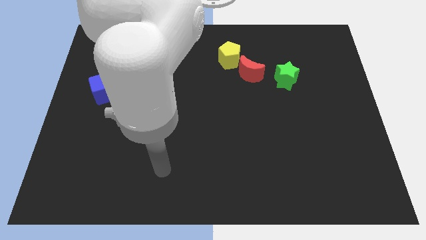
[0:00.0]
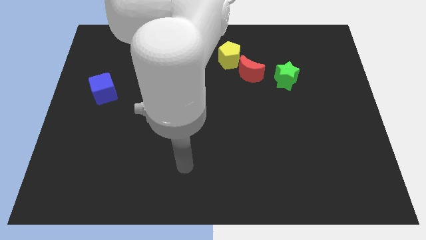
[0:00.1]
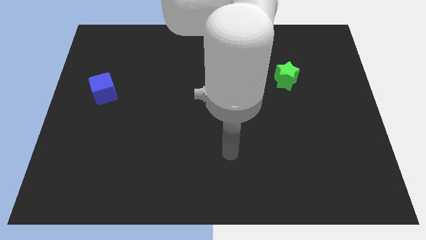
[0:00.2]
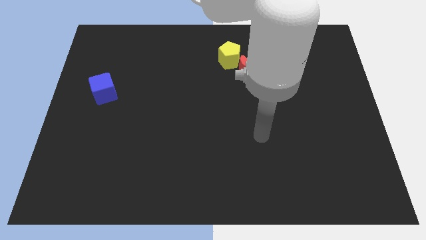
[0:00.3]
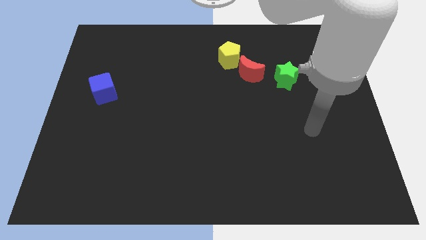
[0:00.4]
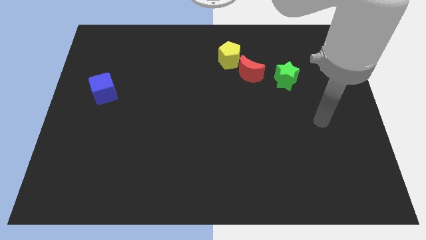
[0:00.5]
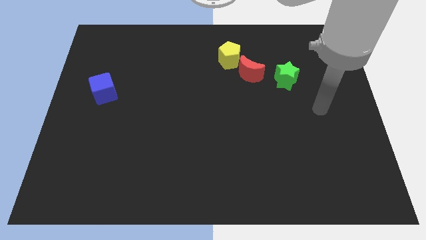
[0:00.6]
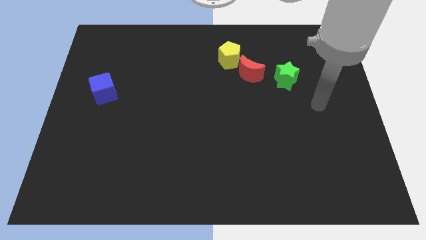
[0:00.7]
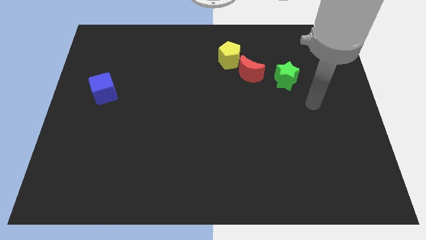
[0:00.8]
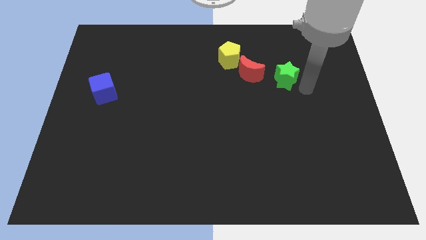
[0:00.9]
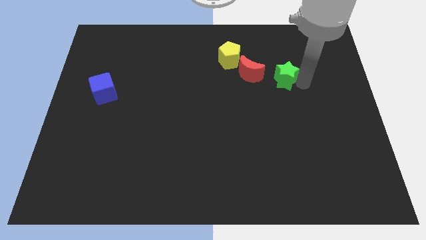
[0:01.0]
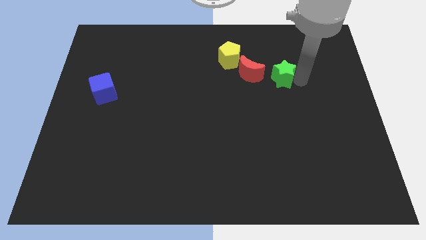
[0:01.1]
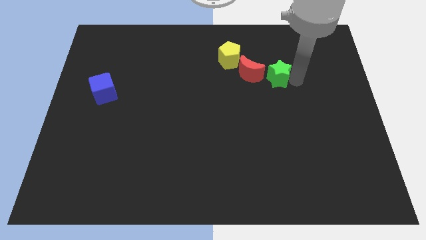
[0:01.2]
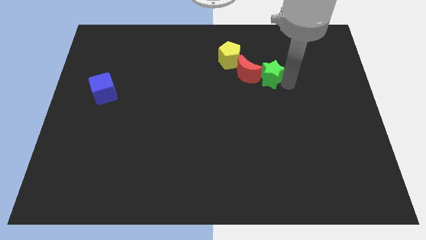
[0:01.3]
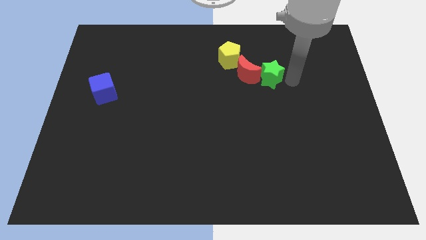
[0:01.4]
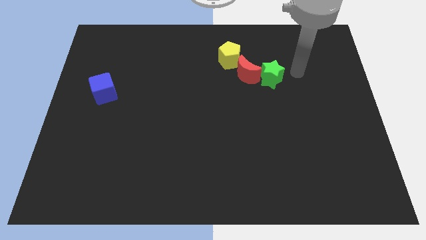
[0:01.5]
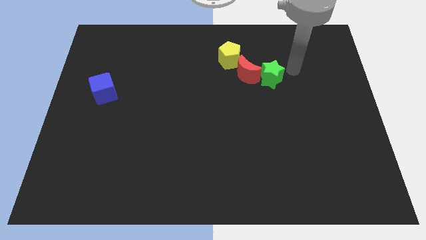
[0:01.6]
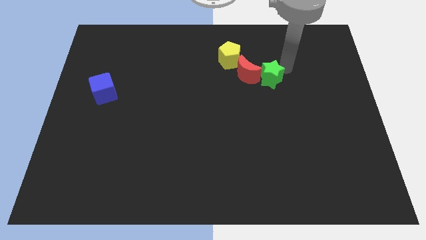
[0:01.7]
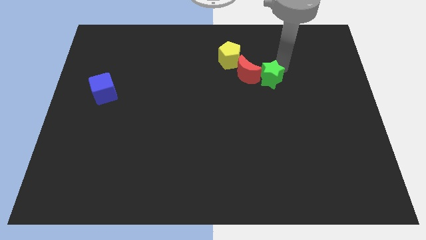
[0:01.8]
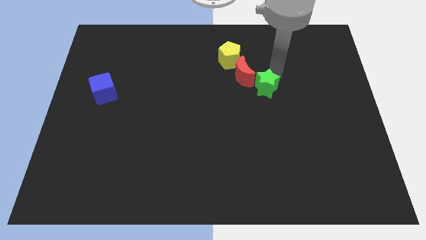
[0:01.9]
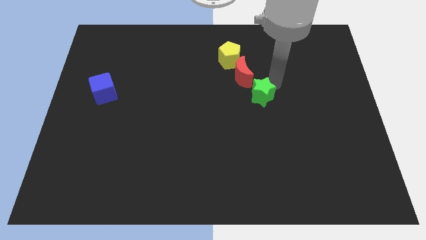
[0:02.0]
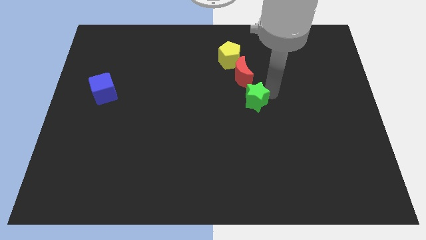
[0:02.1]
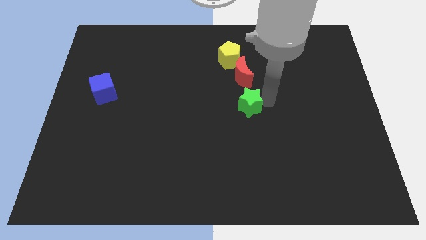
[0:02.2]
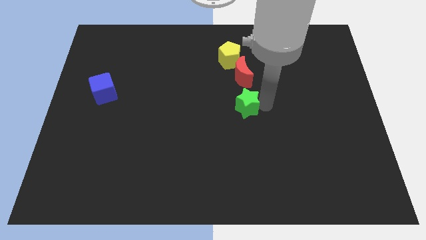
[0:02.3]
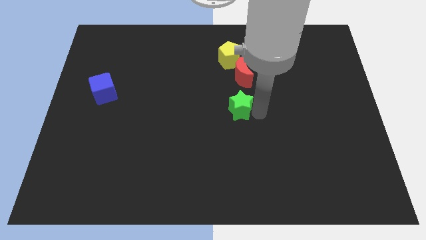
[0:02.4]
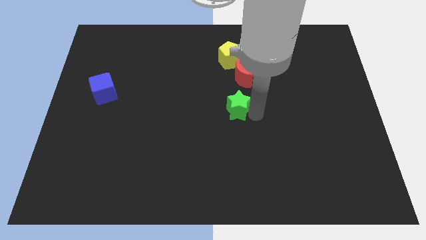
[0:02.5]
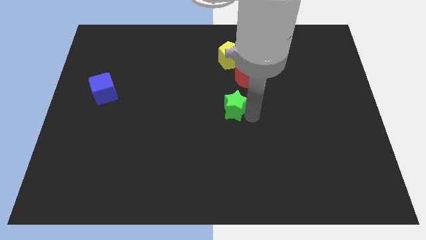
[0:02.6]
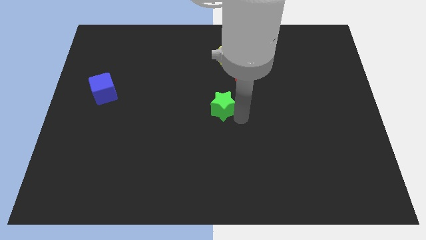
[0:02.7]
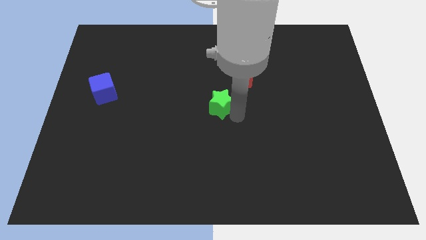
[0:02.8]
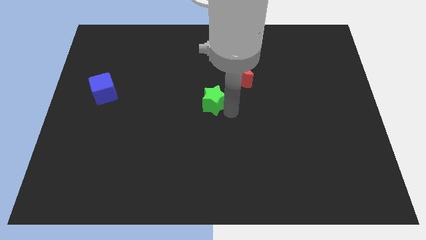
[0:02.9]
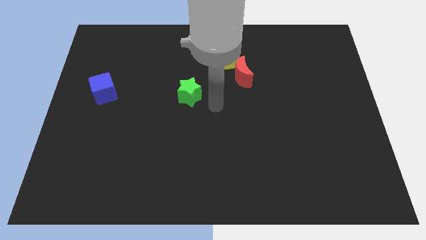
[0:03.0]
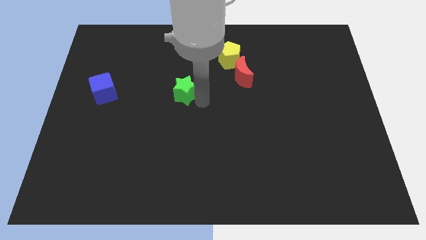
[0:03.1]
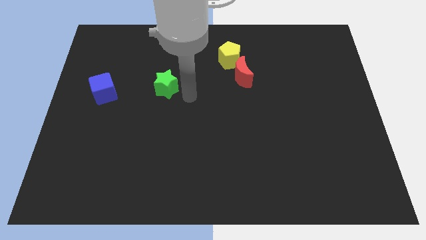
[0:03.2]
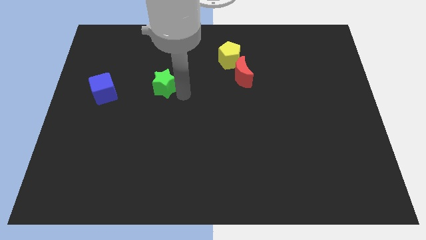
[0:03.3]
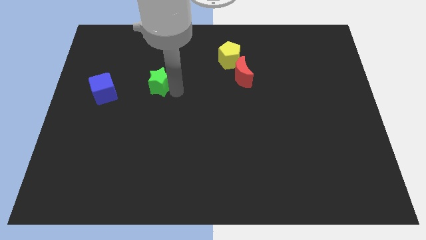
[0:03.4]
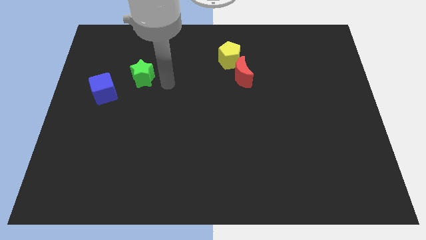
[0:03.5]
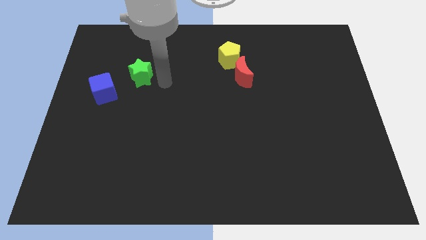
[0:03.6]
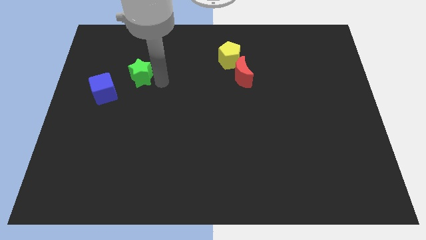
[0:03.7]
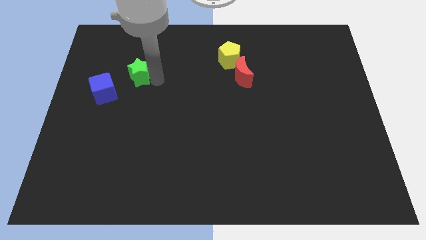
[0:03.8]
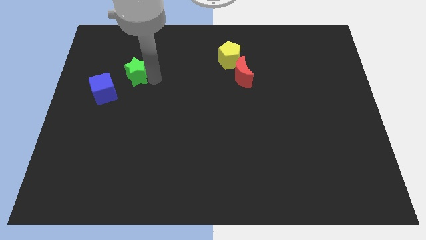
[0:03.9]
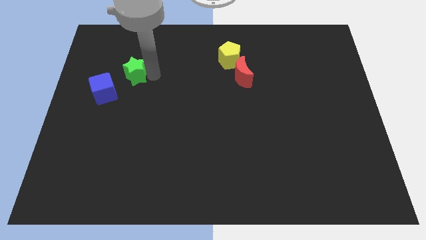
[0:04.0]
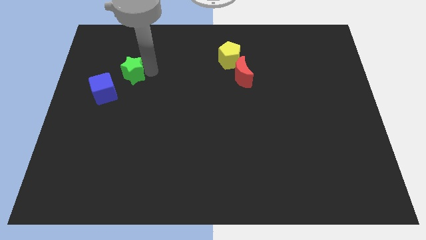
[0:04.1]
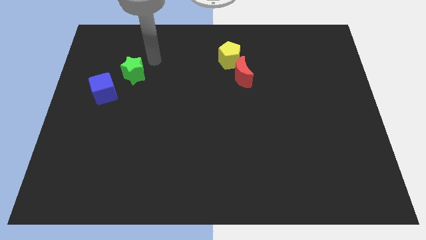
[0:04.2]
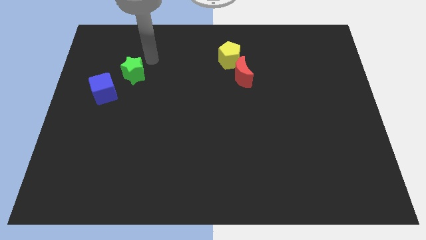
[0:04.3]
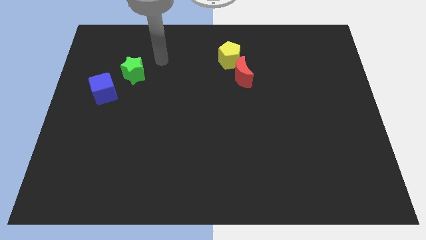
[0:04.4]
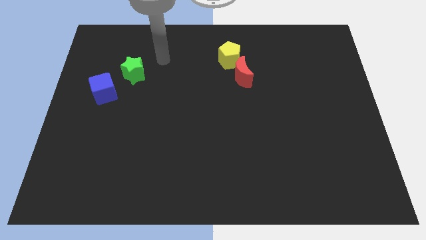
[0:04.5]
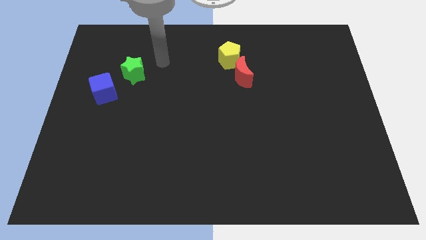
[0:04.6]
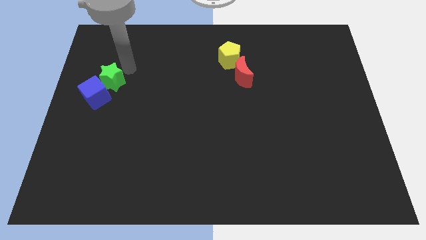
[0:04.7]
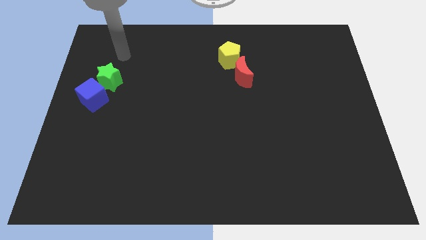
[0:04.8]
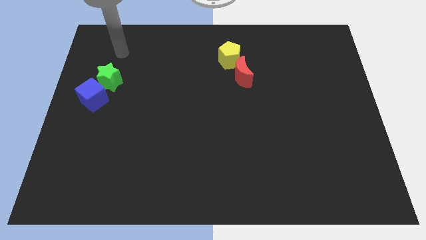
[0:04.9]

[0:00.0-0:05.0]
put the star close to the cube

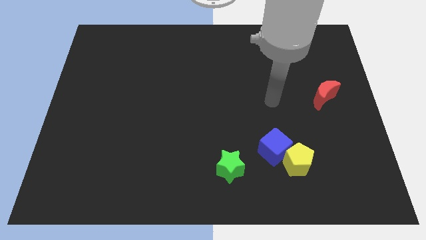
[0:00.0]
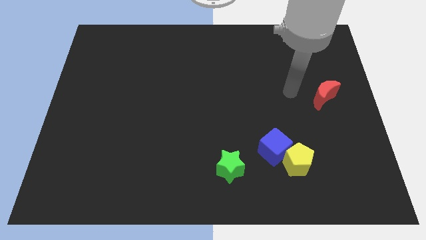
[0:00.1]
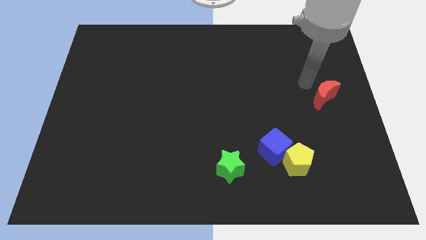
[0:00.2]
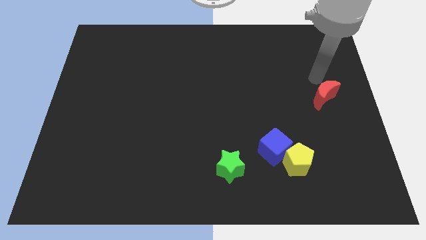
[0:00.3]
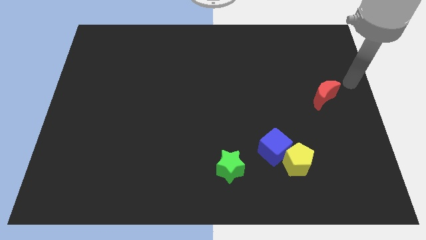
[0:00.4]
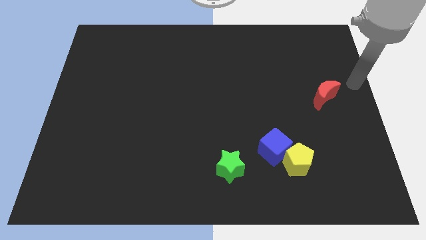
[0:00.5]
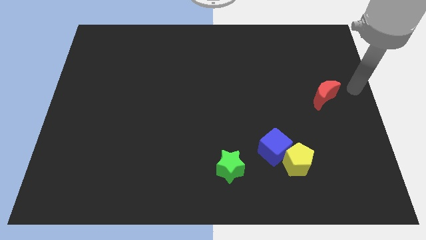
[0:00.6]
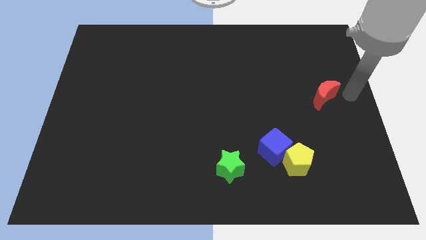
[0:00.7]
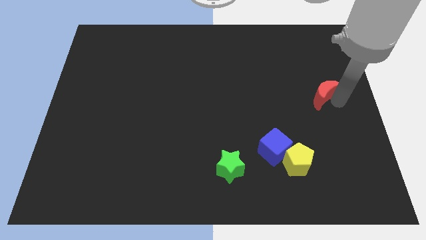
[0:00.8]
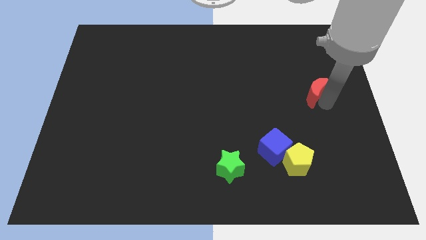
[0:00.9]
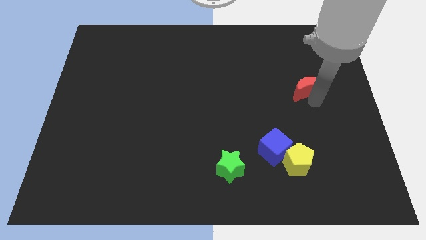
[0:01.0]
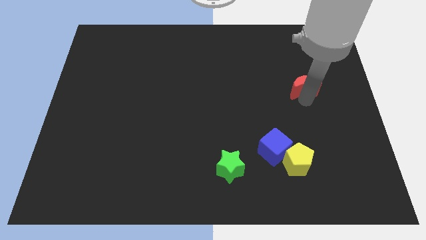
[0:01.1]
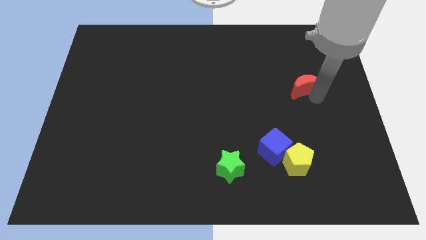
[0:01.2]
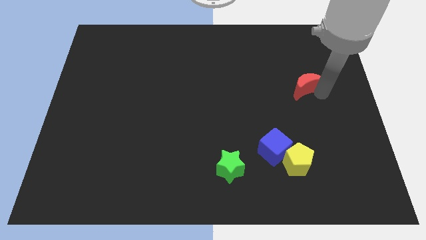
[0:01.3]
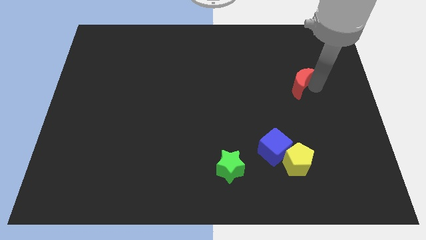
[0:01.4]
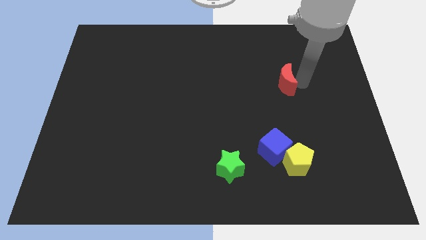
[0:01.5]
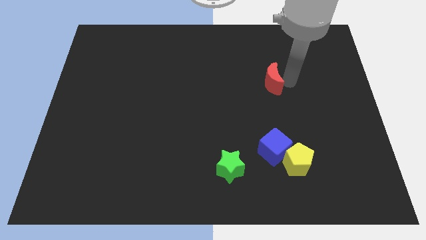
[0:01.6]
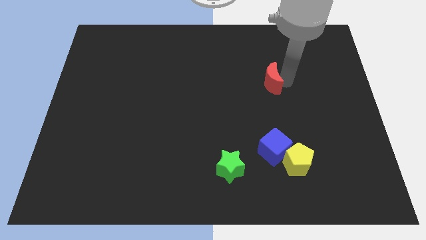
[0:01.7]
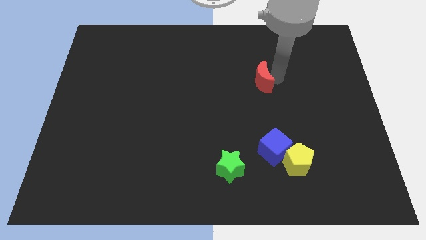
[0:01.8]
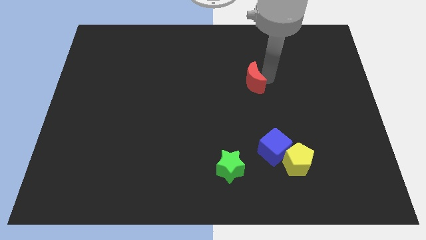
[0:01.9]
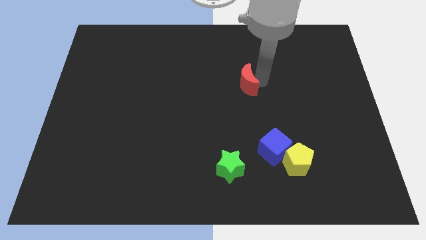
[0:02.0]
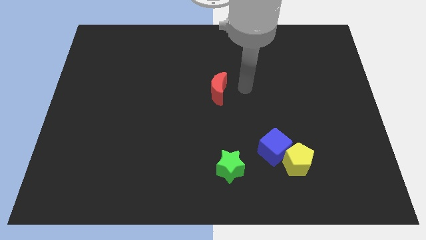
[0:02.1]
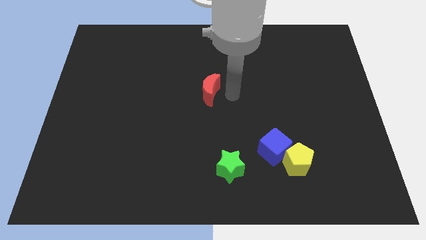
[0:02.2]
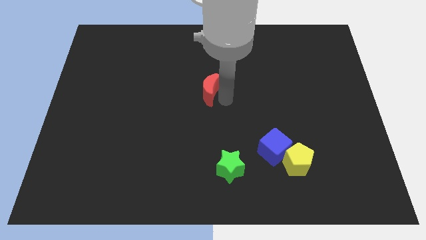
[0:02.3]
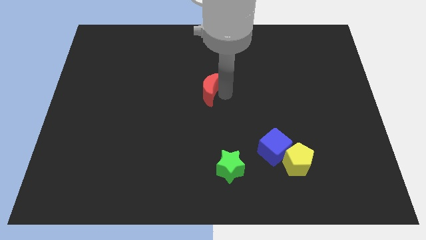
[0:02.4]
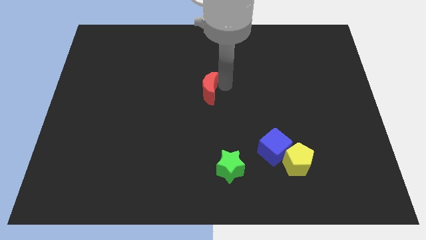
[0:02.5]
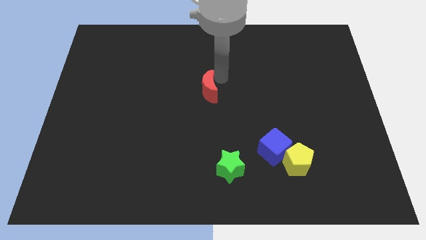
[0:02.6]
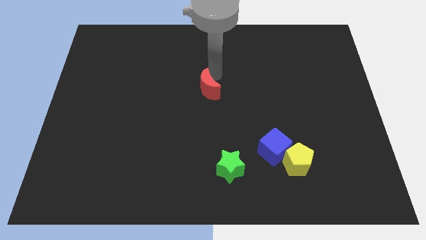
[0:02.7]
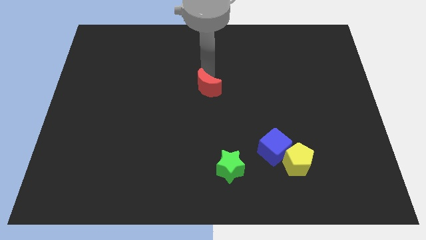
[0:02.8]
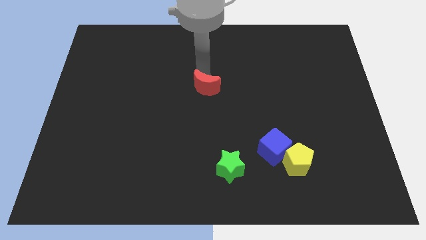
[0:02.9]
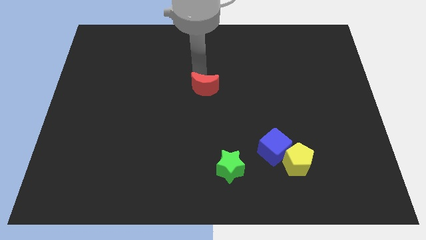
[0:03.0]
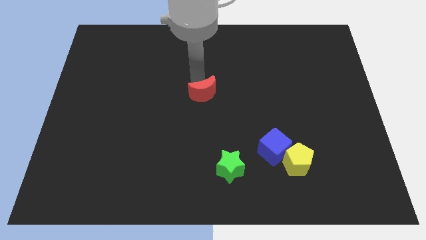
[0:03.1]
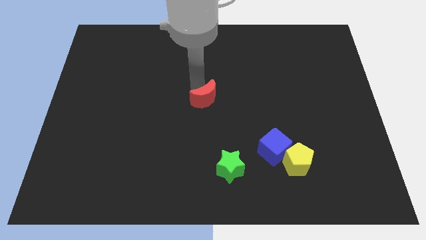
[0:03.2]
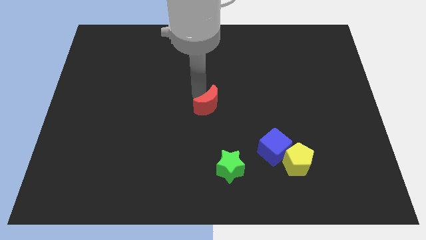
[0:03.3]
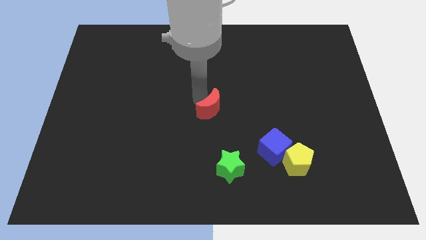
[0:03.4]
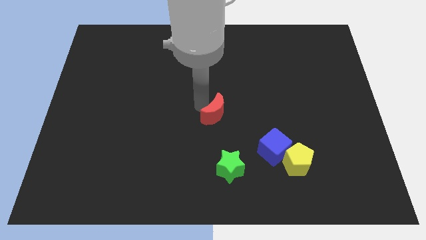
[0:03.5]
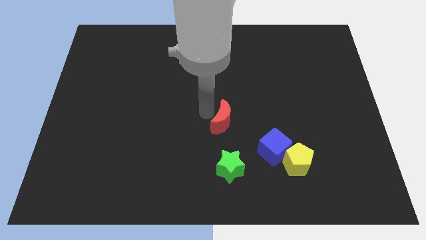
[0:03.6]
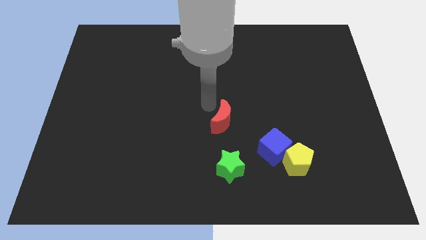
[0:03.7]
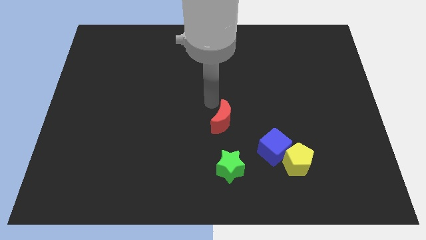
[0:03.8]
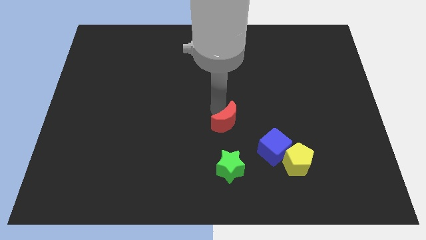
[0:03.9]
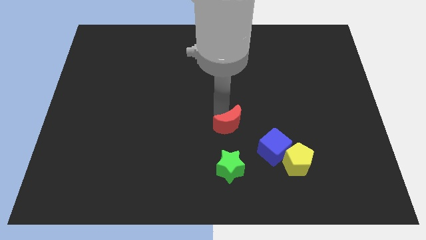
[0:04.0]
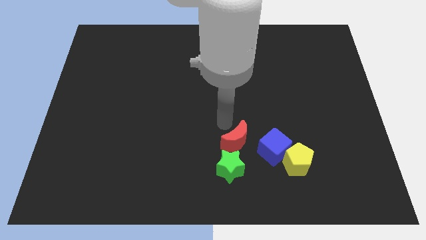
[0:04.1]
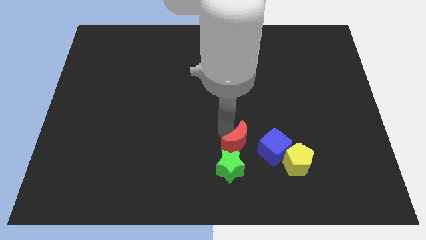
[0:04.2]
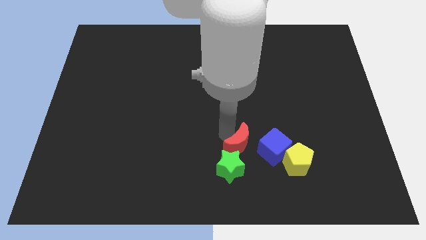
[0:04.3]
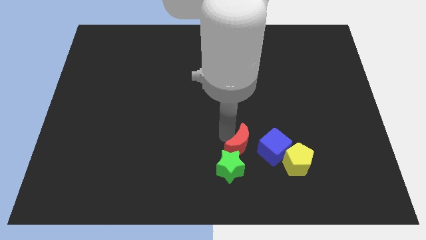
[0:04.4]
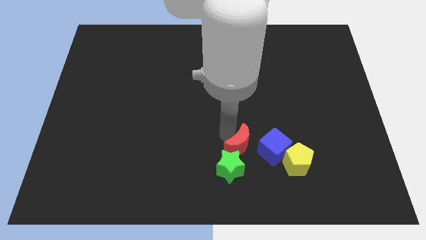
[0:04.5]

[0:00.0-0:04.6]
put the red block next to the star
